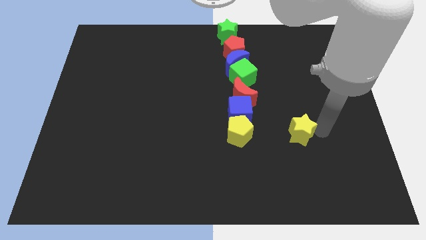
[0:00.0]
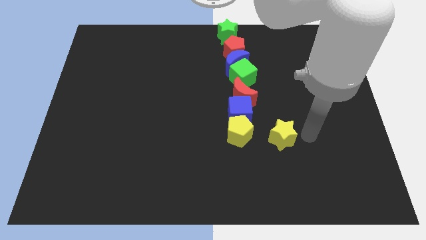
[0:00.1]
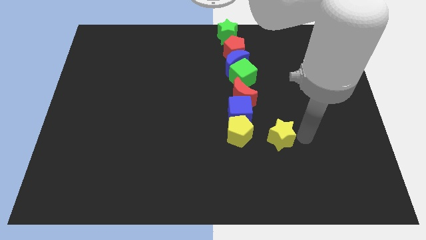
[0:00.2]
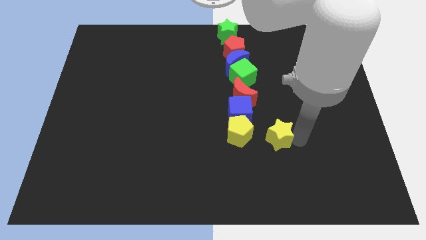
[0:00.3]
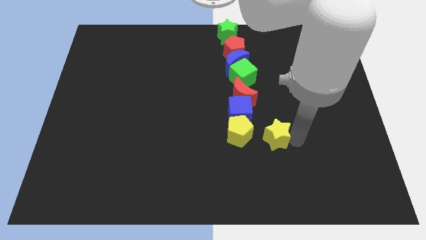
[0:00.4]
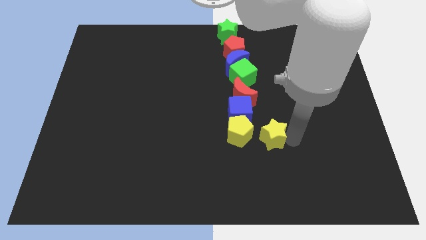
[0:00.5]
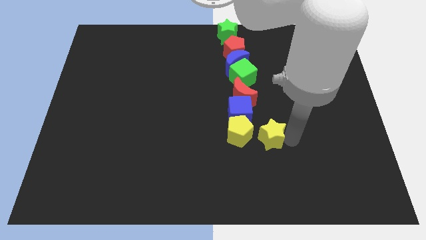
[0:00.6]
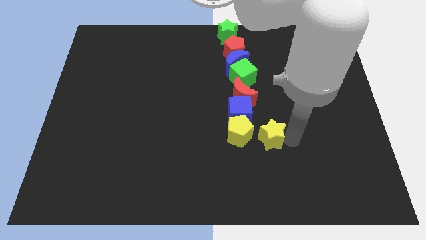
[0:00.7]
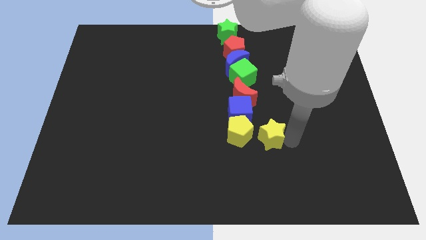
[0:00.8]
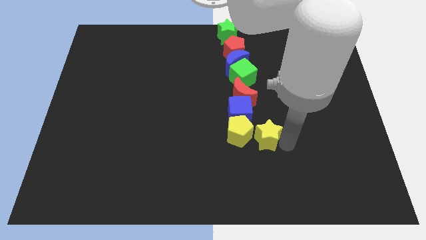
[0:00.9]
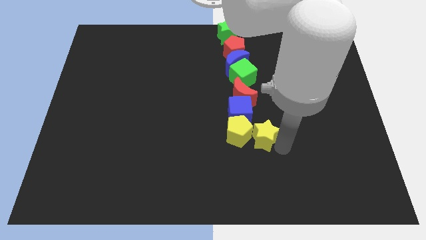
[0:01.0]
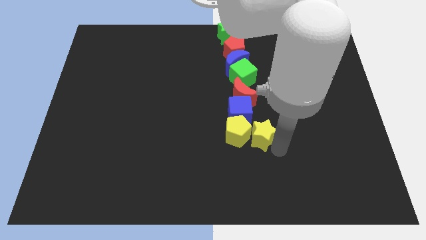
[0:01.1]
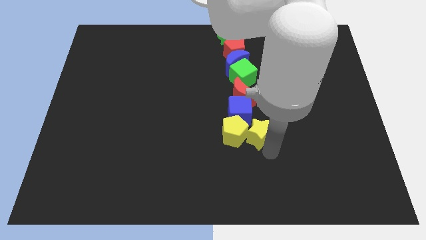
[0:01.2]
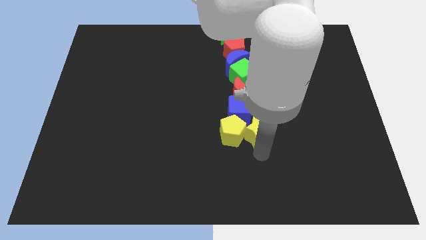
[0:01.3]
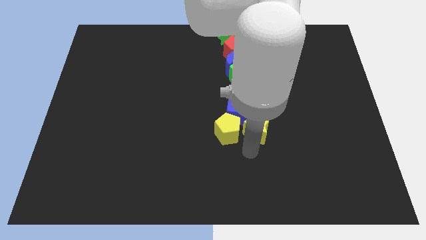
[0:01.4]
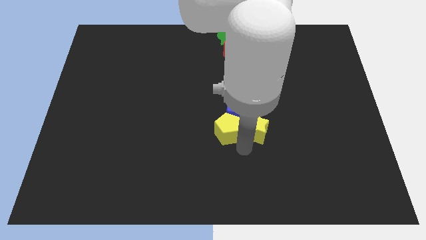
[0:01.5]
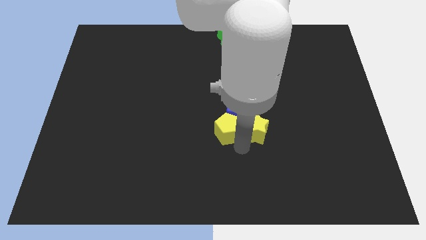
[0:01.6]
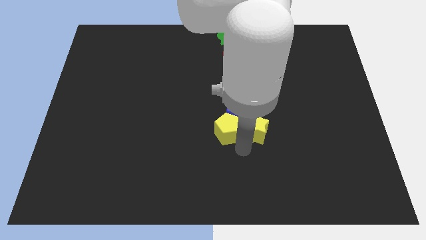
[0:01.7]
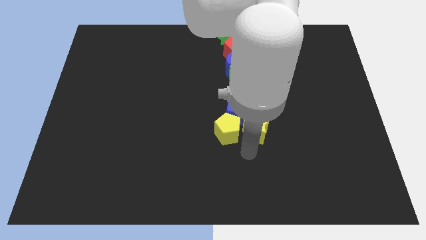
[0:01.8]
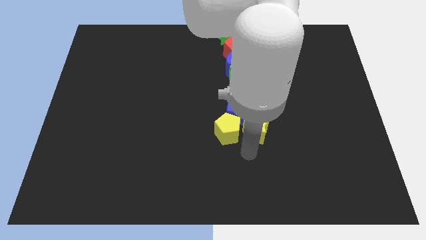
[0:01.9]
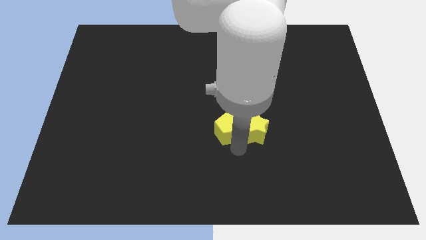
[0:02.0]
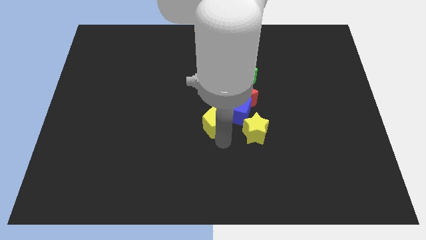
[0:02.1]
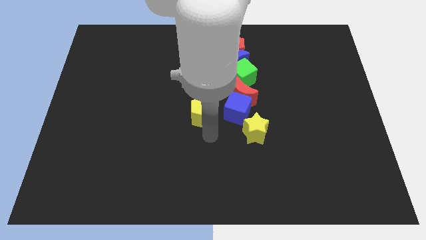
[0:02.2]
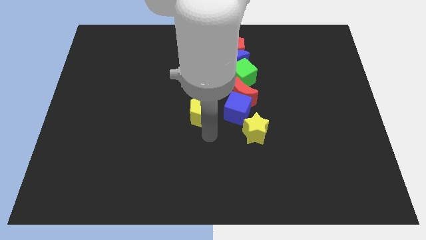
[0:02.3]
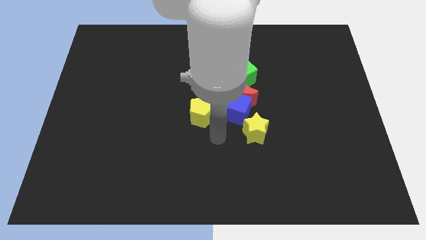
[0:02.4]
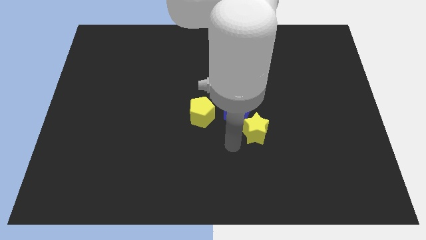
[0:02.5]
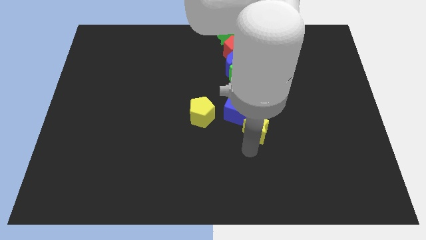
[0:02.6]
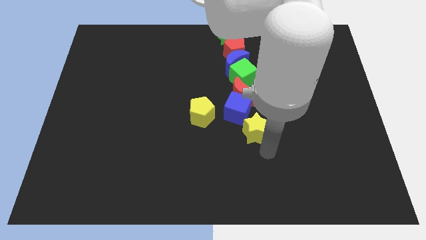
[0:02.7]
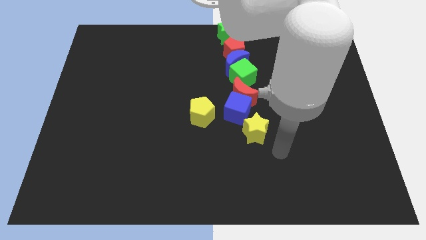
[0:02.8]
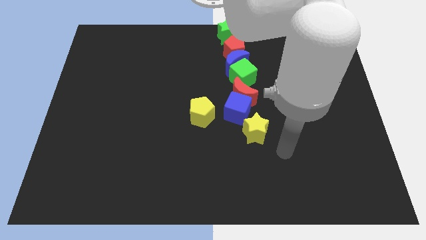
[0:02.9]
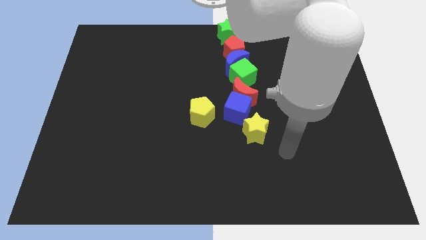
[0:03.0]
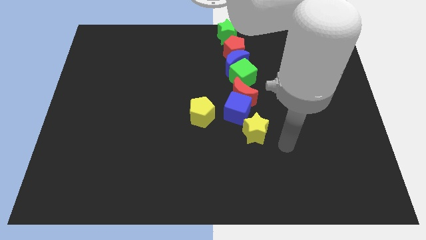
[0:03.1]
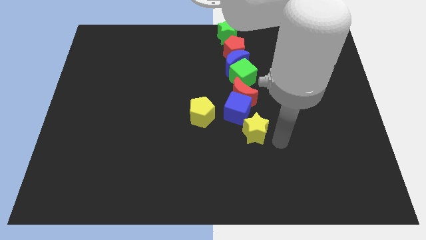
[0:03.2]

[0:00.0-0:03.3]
push the yellow pentagon to the left side of the blue cube

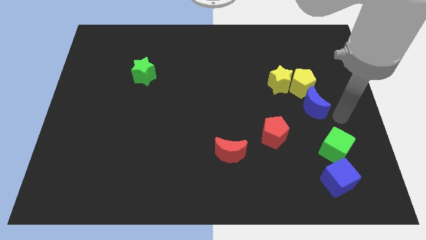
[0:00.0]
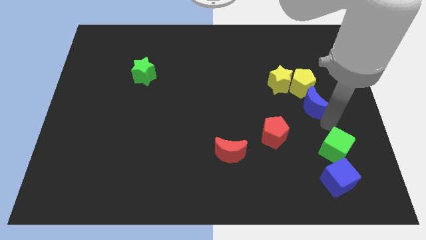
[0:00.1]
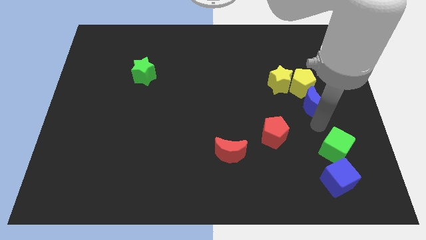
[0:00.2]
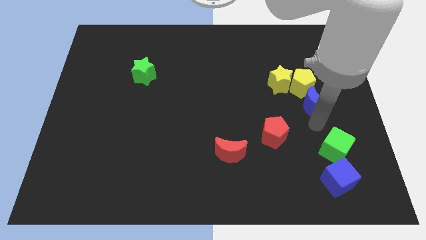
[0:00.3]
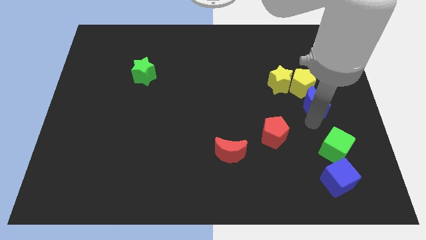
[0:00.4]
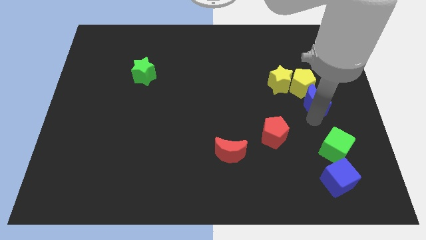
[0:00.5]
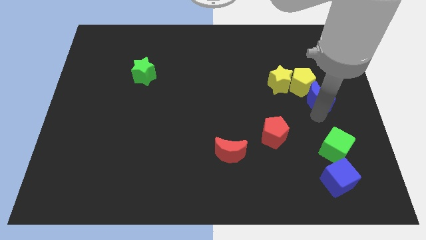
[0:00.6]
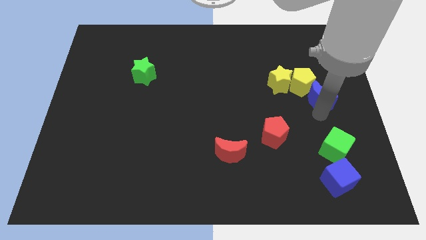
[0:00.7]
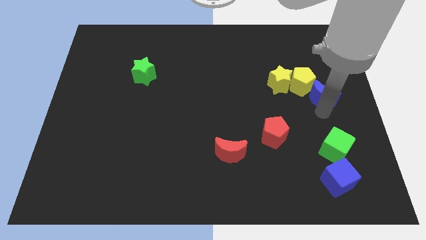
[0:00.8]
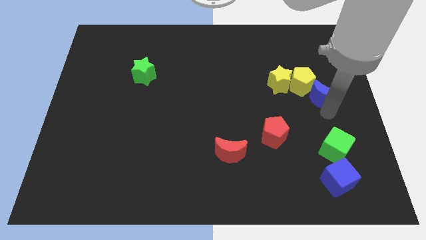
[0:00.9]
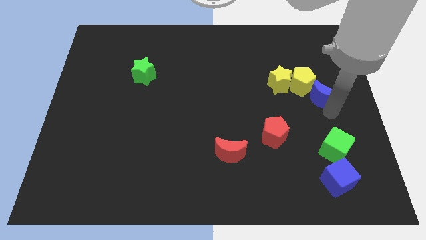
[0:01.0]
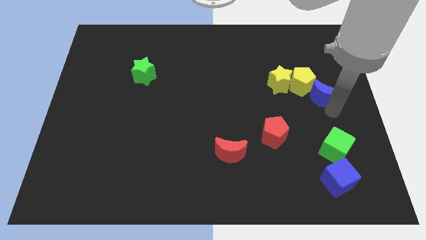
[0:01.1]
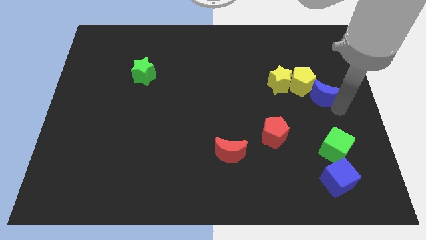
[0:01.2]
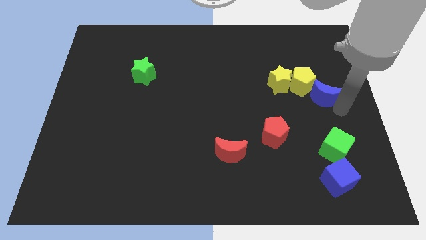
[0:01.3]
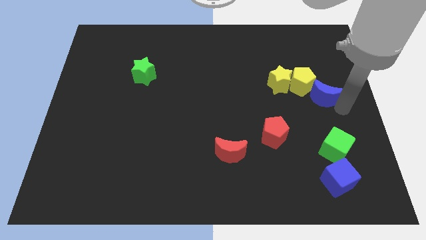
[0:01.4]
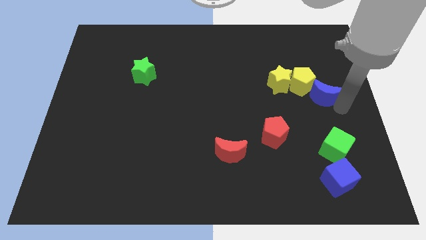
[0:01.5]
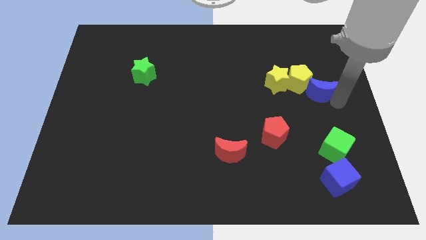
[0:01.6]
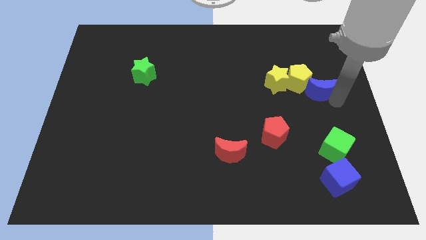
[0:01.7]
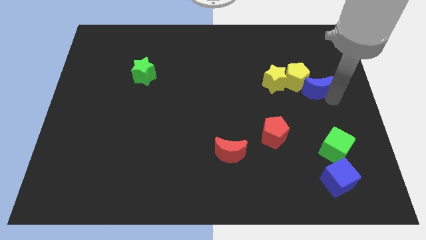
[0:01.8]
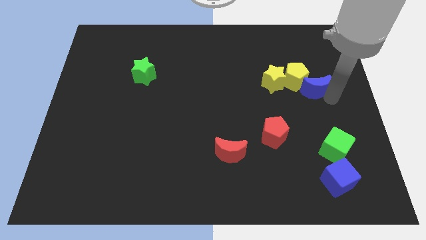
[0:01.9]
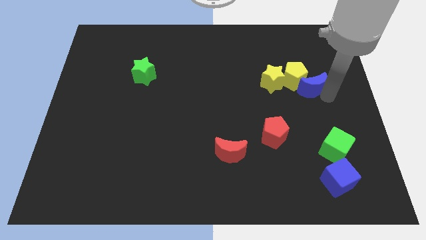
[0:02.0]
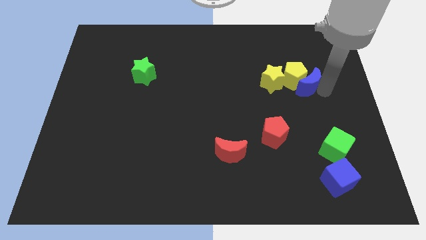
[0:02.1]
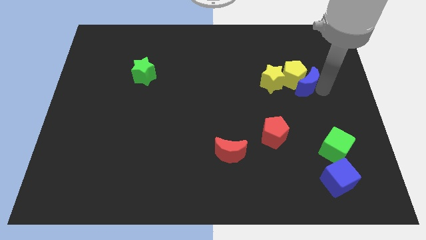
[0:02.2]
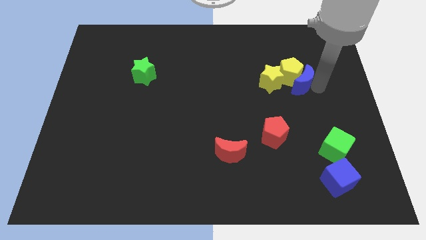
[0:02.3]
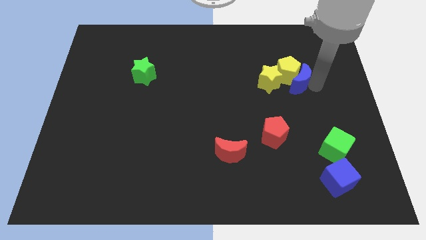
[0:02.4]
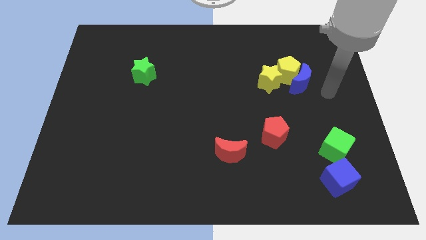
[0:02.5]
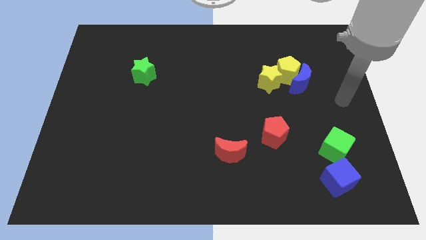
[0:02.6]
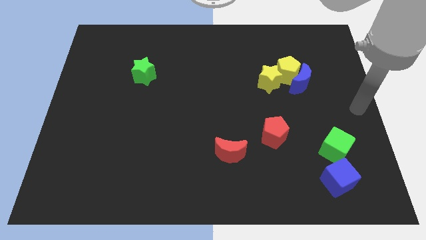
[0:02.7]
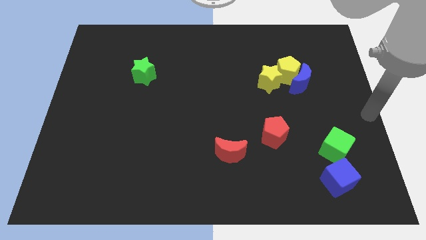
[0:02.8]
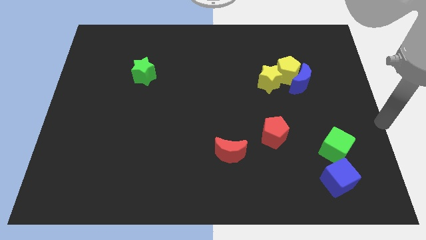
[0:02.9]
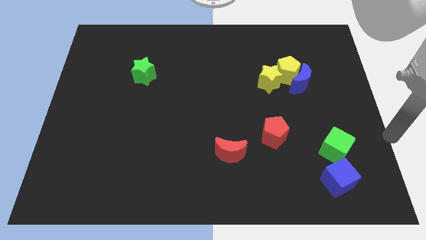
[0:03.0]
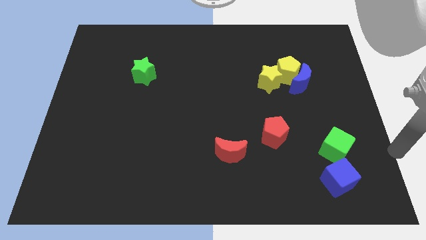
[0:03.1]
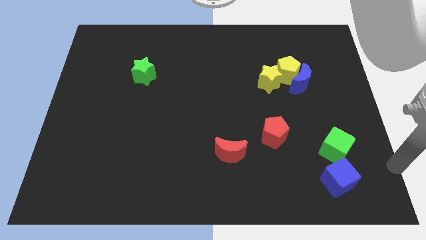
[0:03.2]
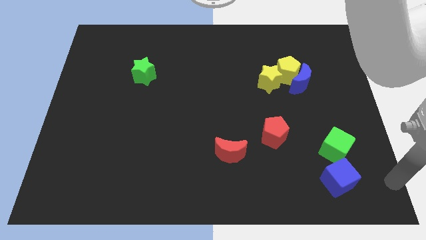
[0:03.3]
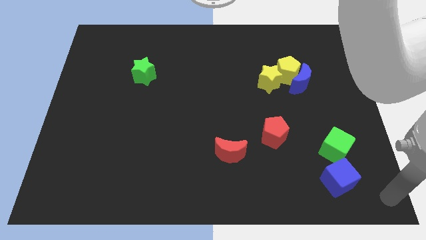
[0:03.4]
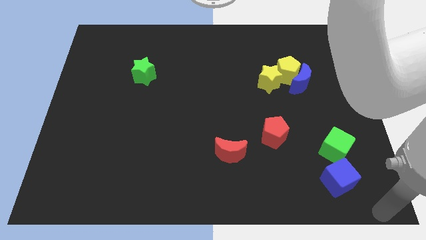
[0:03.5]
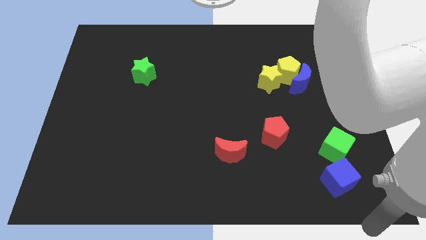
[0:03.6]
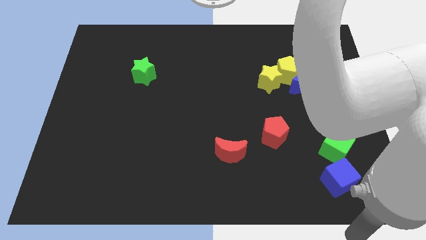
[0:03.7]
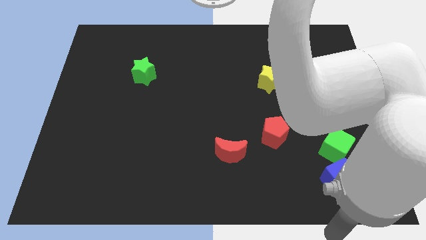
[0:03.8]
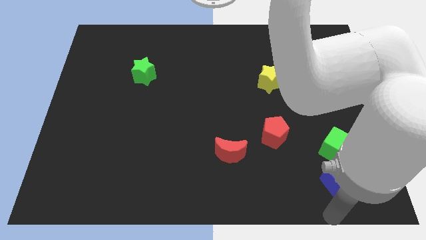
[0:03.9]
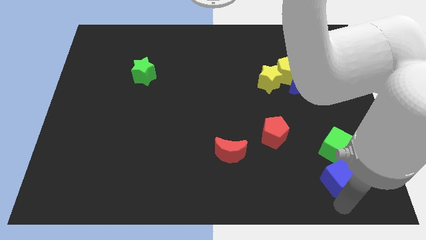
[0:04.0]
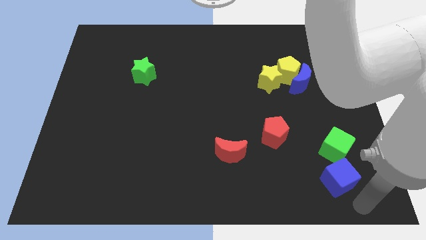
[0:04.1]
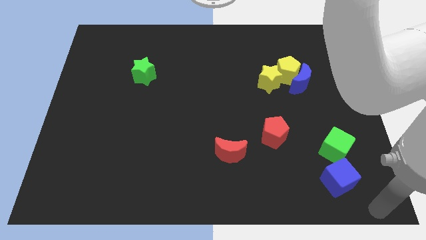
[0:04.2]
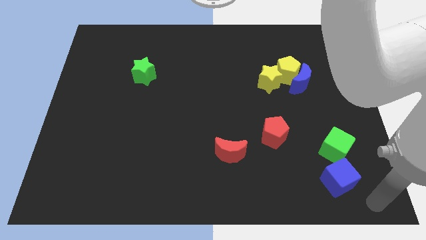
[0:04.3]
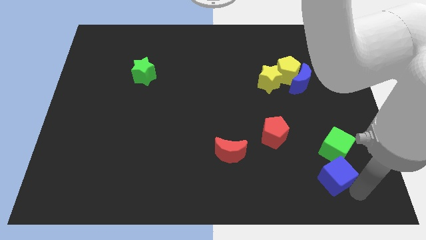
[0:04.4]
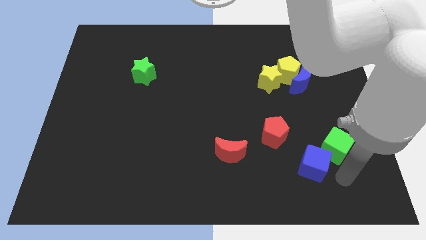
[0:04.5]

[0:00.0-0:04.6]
move the blue crescent into the yellow pentagon

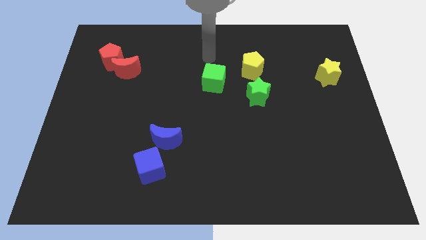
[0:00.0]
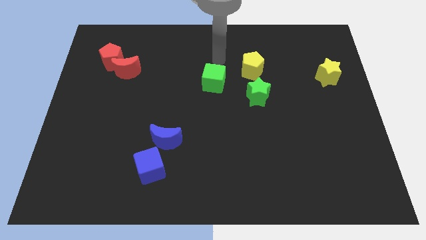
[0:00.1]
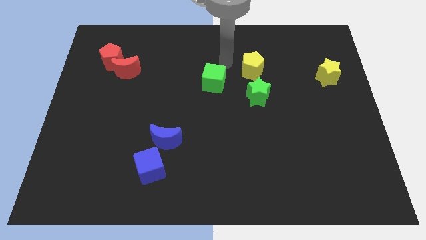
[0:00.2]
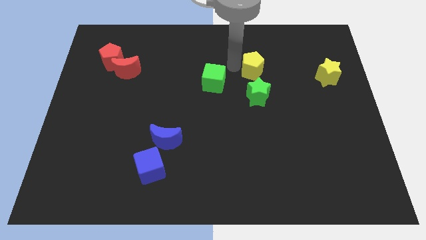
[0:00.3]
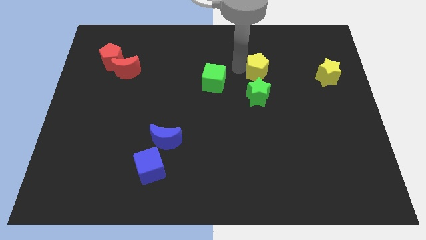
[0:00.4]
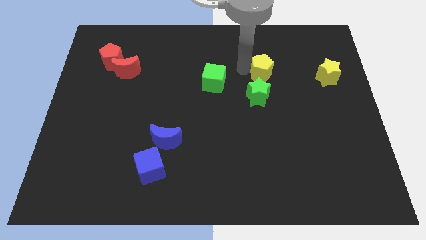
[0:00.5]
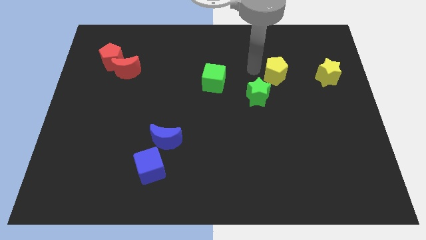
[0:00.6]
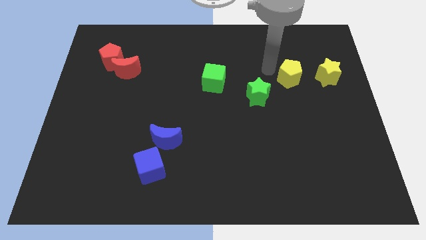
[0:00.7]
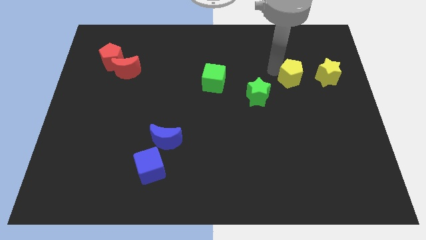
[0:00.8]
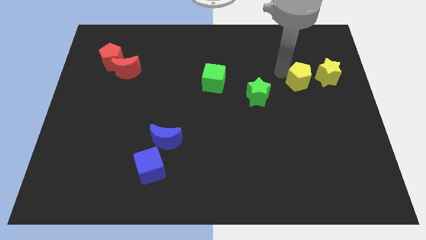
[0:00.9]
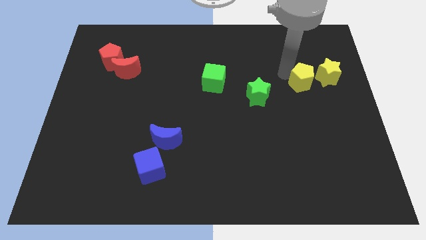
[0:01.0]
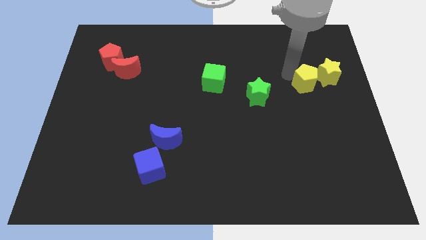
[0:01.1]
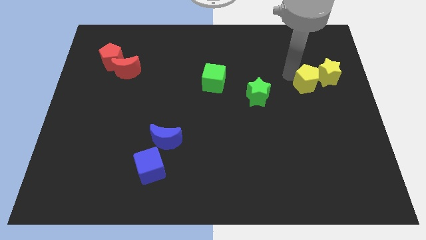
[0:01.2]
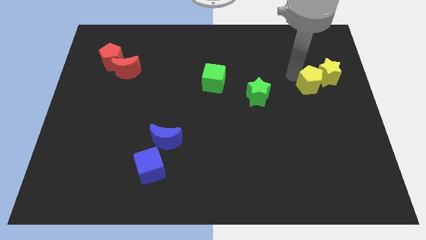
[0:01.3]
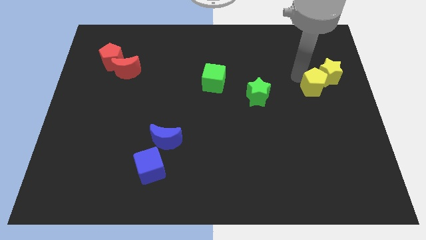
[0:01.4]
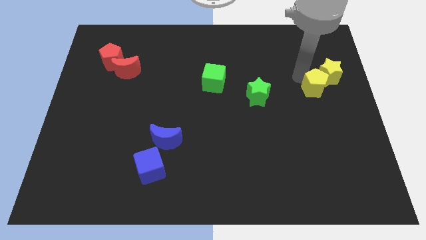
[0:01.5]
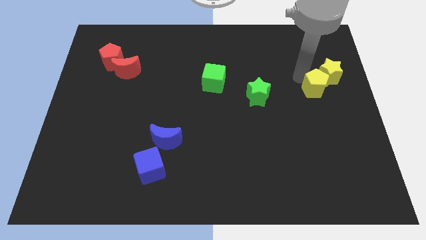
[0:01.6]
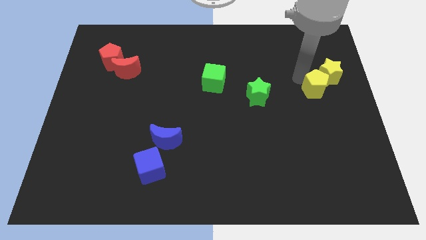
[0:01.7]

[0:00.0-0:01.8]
move the yellow pentagon to the bottom left side of the star
